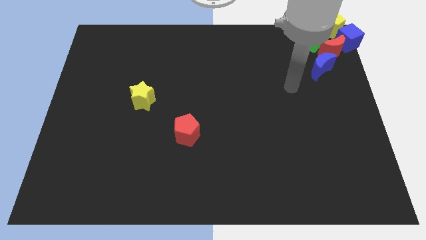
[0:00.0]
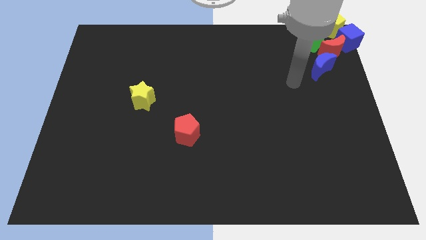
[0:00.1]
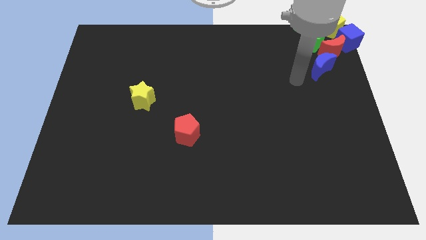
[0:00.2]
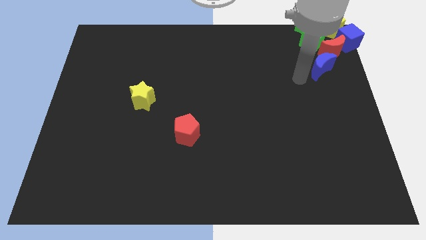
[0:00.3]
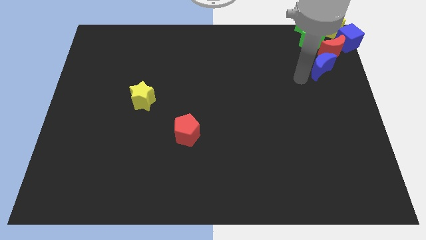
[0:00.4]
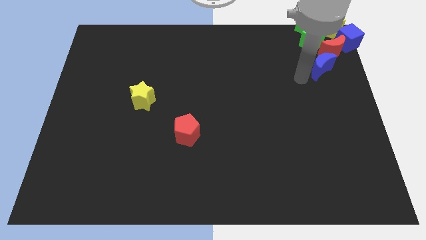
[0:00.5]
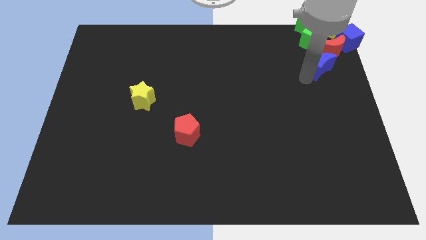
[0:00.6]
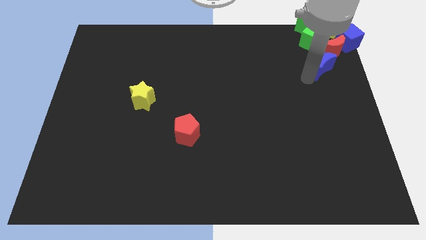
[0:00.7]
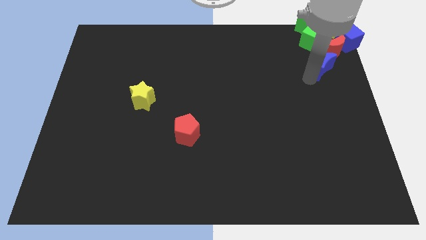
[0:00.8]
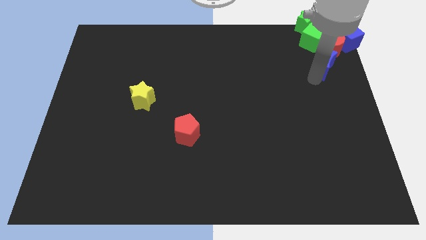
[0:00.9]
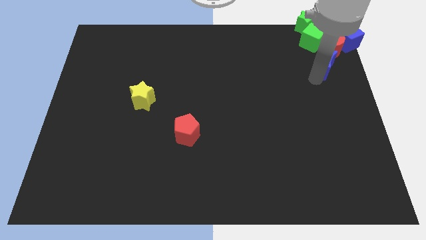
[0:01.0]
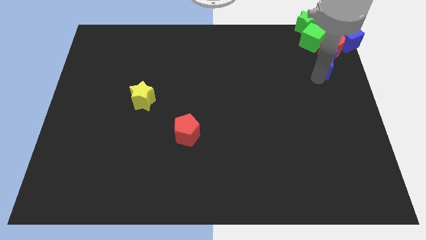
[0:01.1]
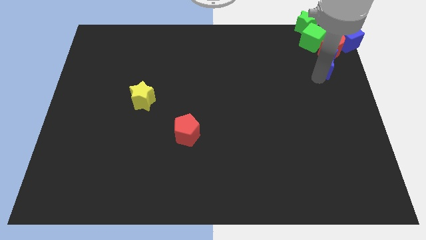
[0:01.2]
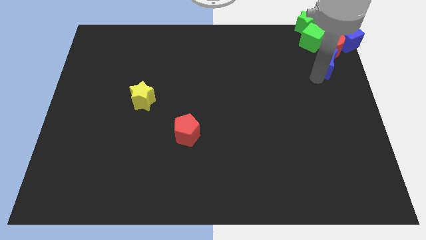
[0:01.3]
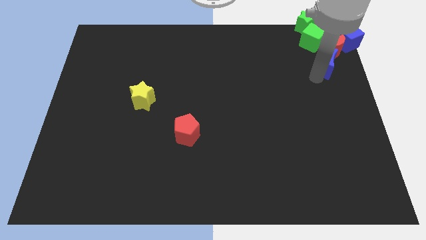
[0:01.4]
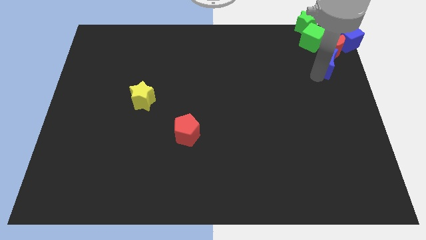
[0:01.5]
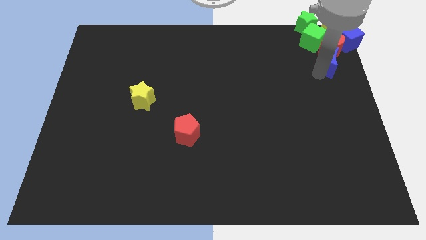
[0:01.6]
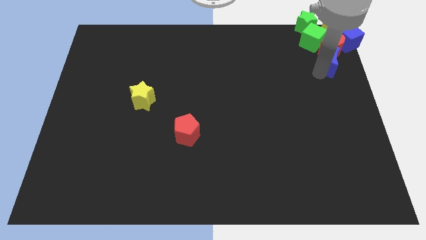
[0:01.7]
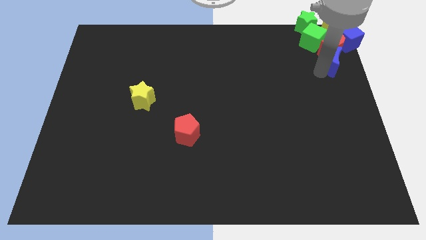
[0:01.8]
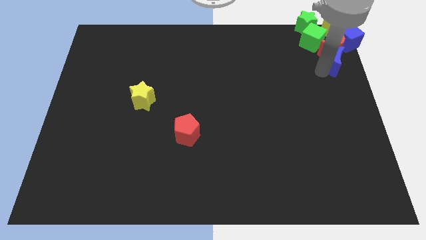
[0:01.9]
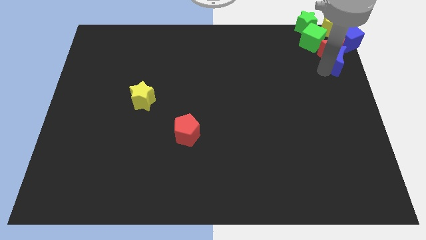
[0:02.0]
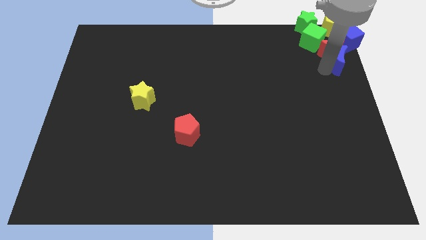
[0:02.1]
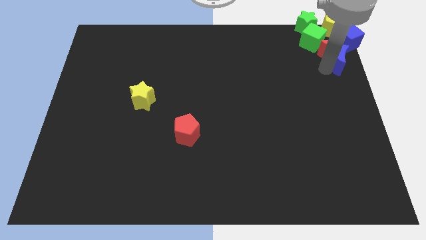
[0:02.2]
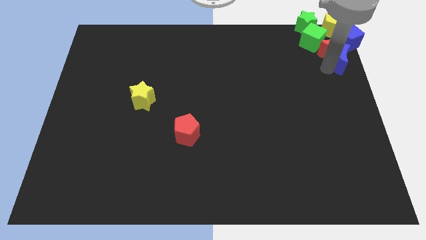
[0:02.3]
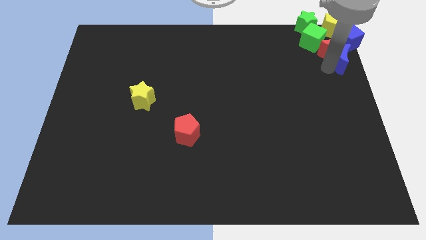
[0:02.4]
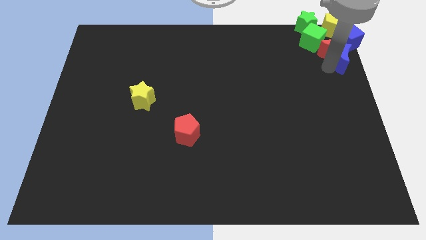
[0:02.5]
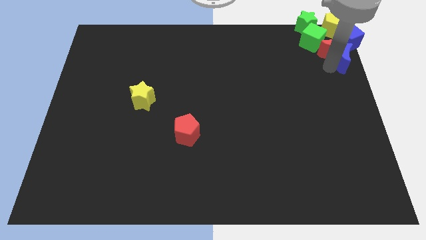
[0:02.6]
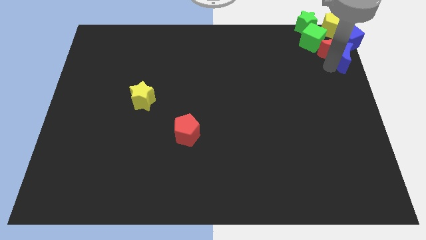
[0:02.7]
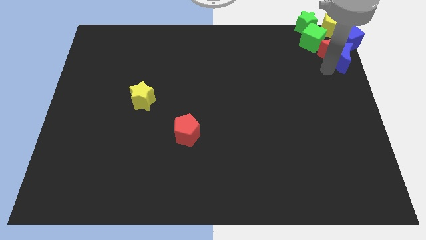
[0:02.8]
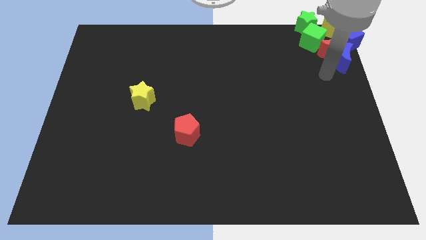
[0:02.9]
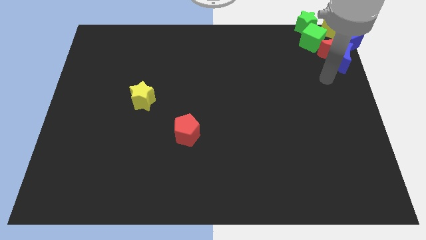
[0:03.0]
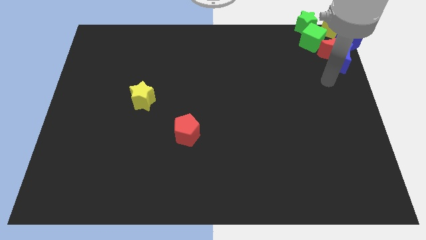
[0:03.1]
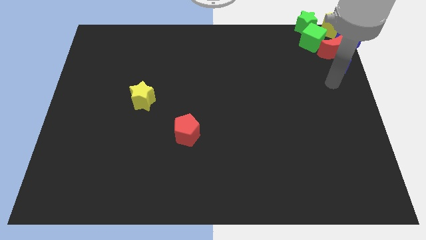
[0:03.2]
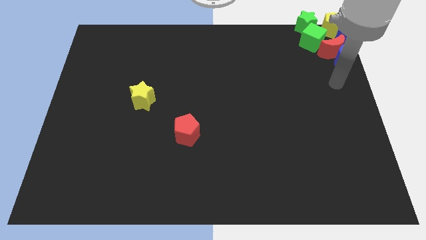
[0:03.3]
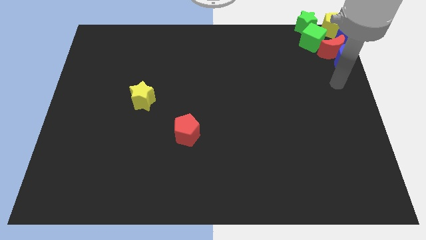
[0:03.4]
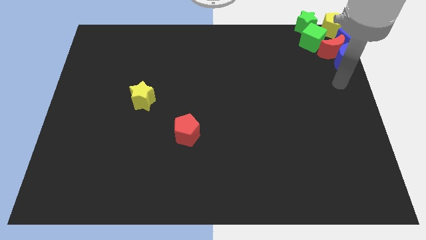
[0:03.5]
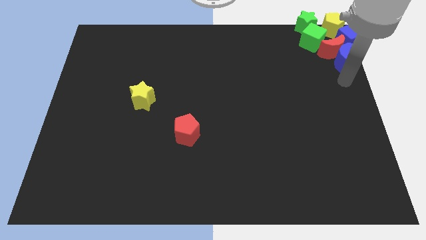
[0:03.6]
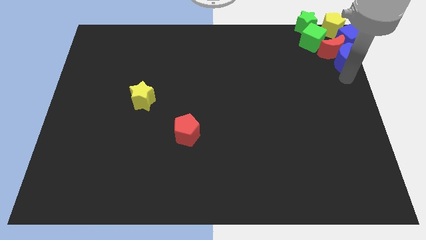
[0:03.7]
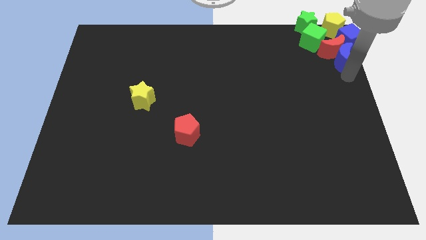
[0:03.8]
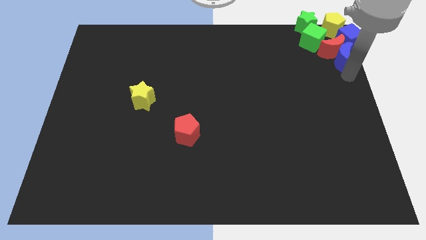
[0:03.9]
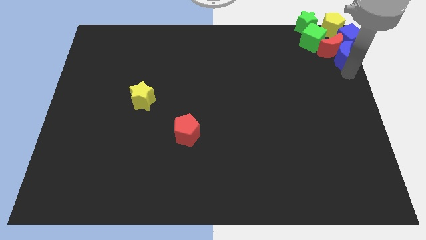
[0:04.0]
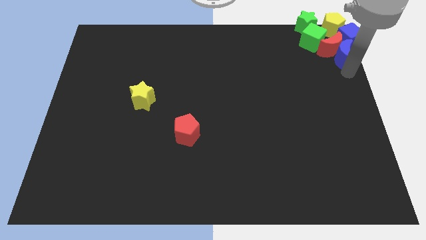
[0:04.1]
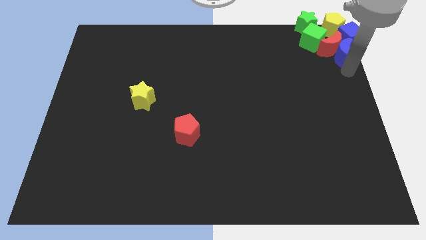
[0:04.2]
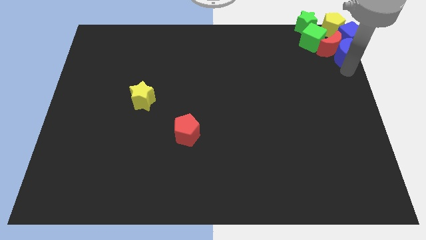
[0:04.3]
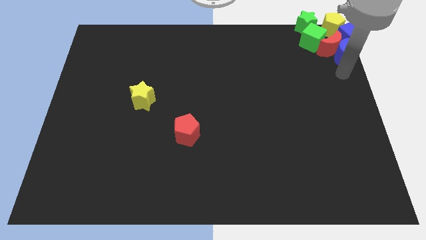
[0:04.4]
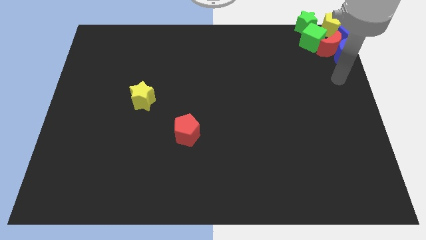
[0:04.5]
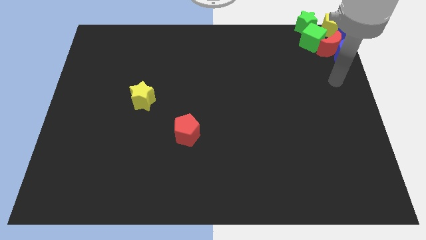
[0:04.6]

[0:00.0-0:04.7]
place the blue crescent to the bottom side of the blue cube

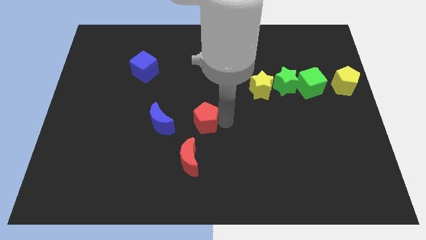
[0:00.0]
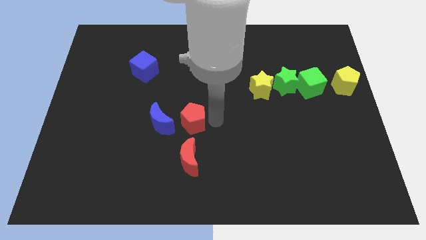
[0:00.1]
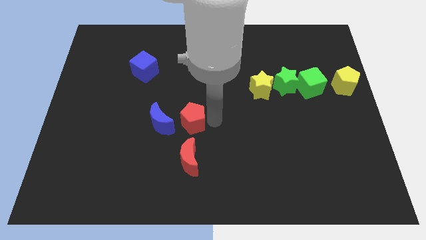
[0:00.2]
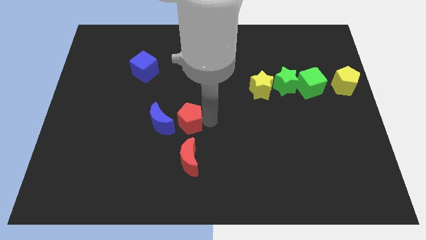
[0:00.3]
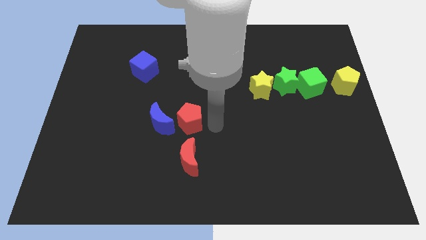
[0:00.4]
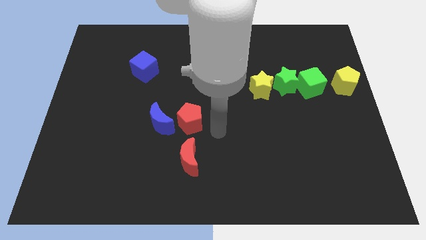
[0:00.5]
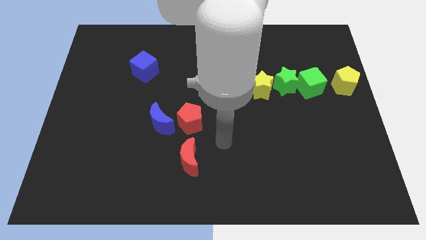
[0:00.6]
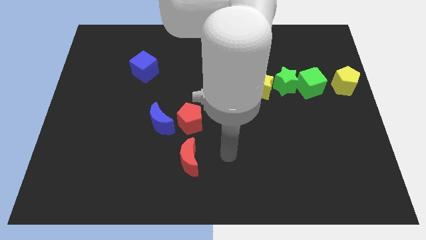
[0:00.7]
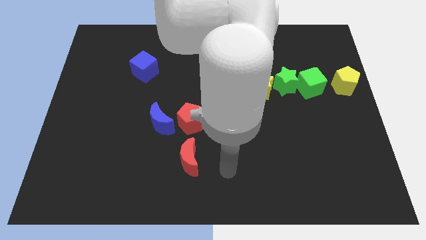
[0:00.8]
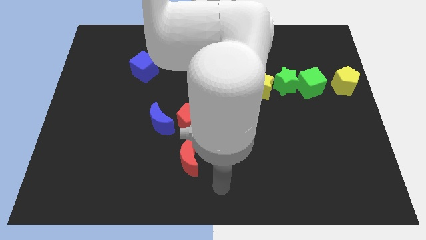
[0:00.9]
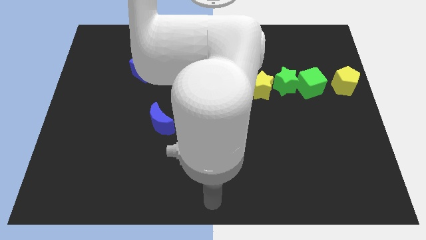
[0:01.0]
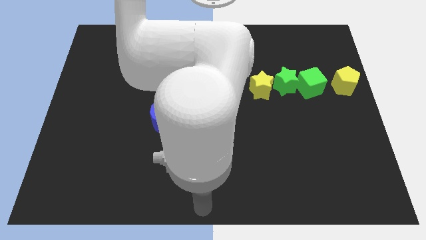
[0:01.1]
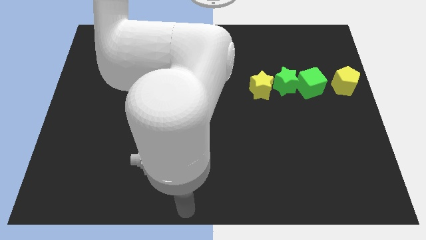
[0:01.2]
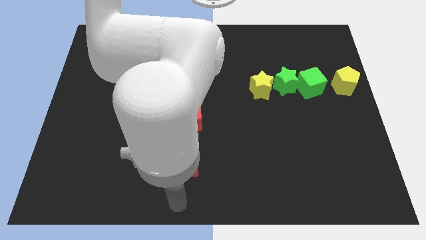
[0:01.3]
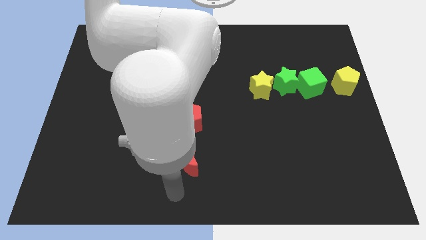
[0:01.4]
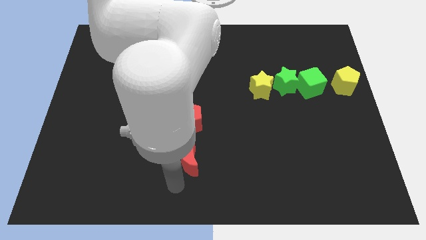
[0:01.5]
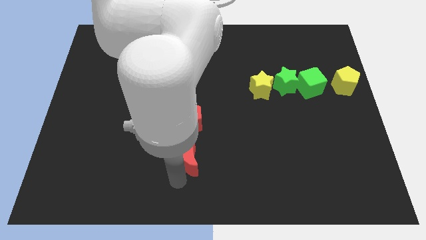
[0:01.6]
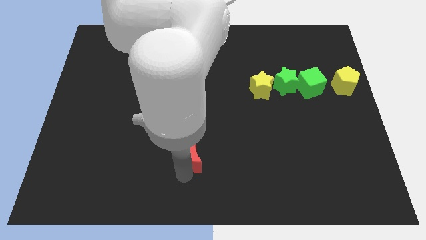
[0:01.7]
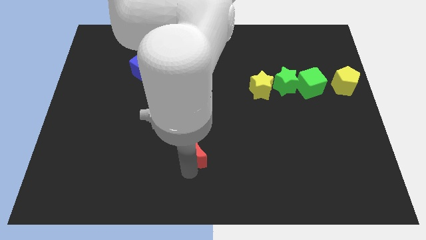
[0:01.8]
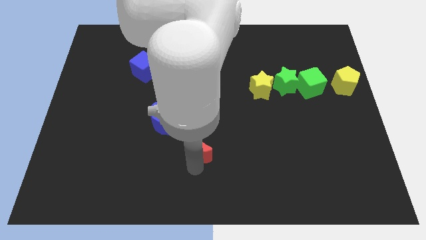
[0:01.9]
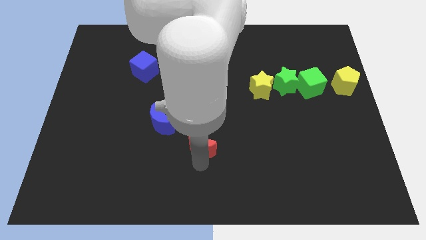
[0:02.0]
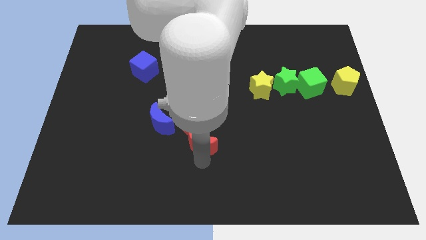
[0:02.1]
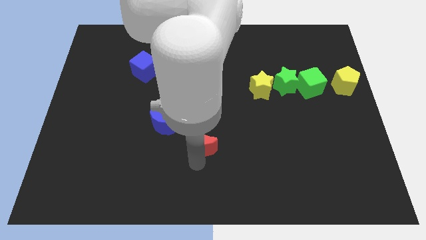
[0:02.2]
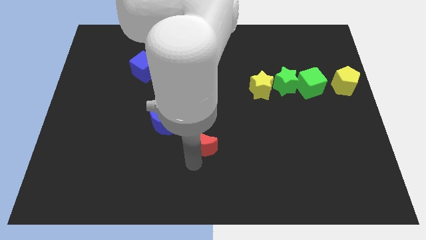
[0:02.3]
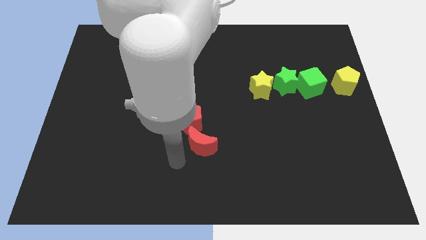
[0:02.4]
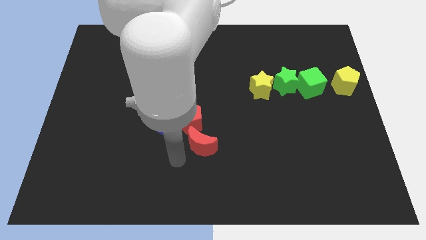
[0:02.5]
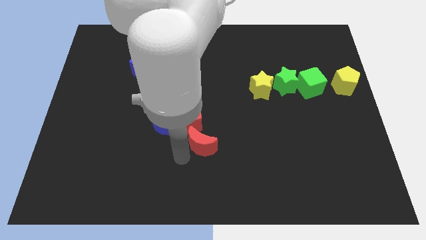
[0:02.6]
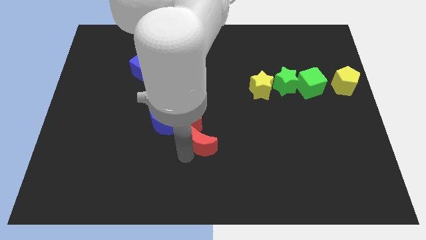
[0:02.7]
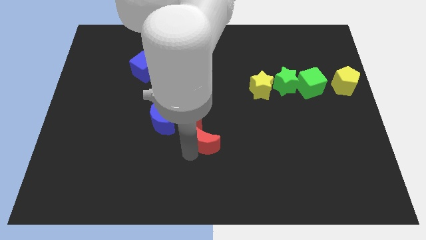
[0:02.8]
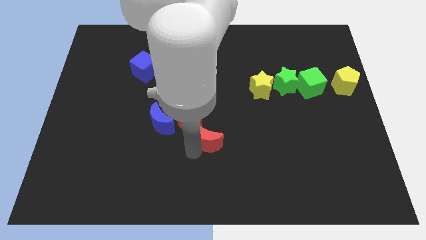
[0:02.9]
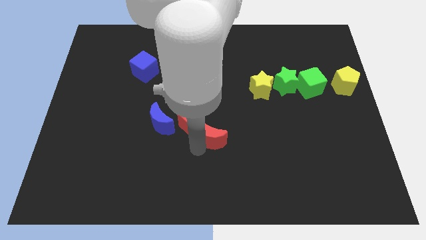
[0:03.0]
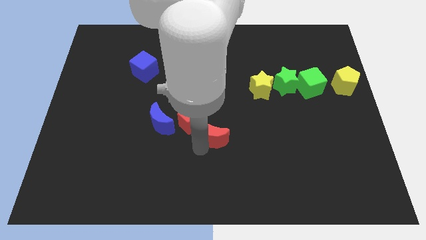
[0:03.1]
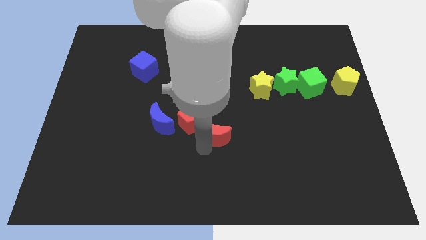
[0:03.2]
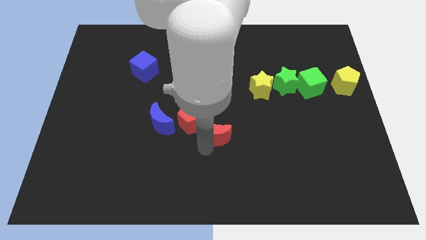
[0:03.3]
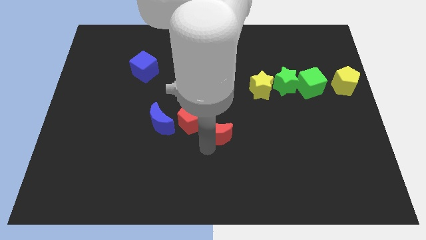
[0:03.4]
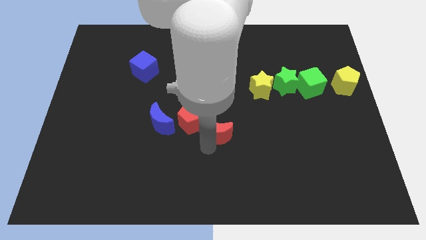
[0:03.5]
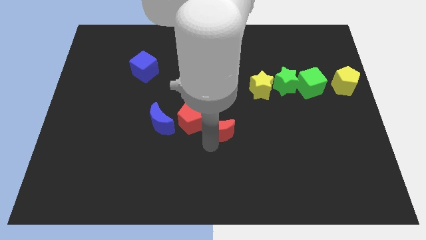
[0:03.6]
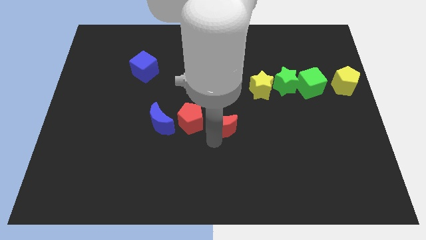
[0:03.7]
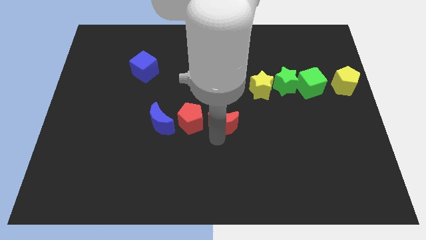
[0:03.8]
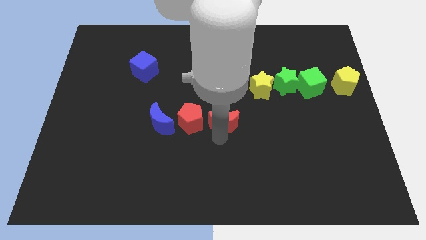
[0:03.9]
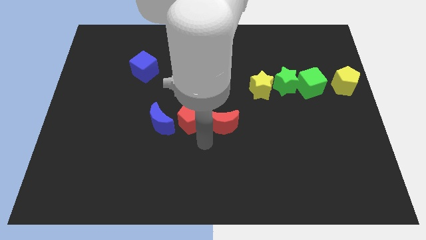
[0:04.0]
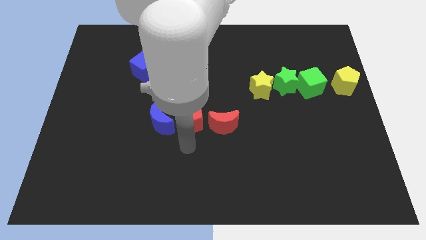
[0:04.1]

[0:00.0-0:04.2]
place the red moon right to the red pentagon
